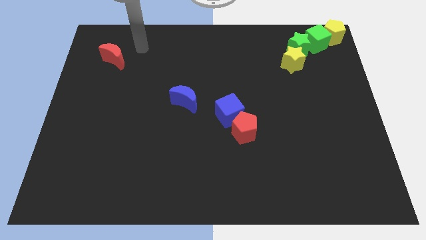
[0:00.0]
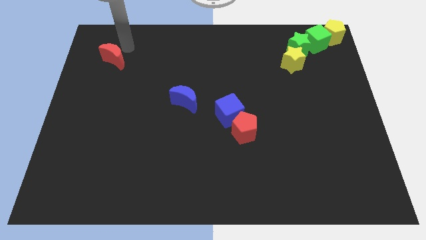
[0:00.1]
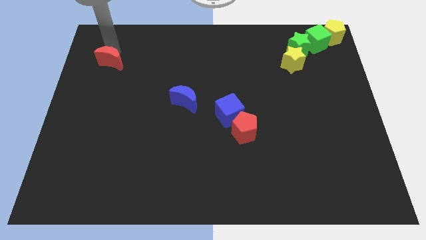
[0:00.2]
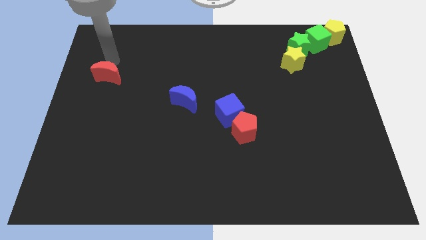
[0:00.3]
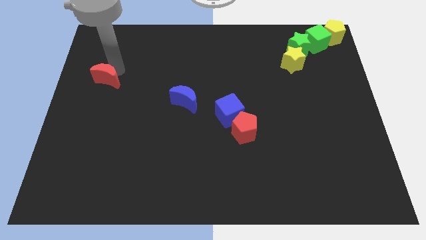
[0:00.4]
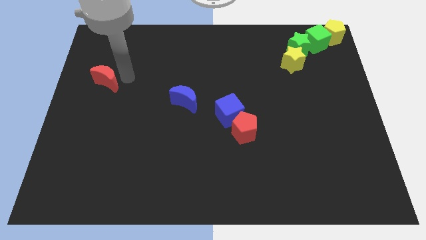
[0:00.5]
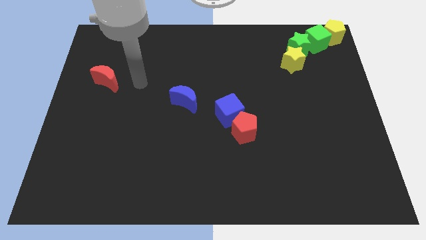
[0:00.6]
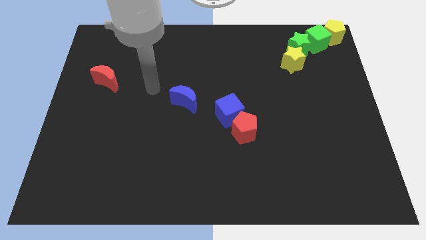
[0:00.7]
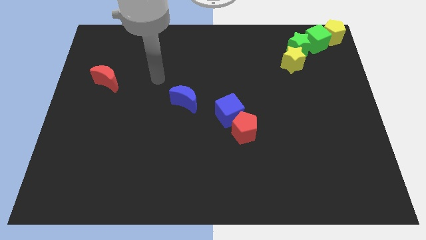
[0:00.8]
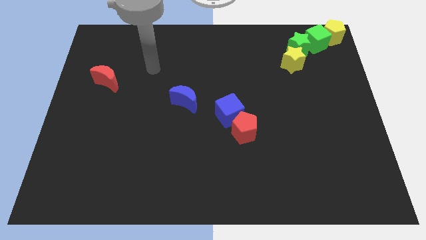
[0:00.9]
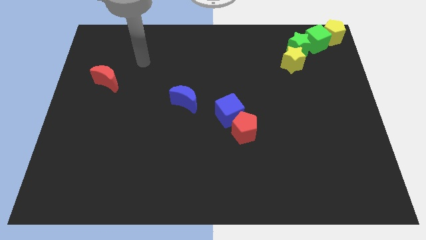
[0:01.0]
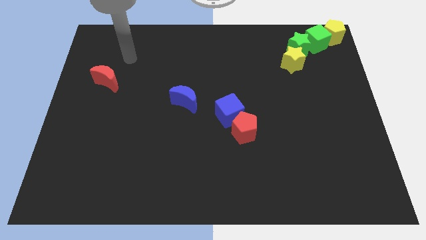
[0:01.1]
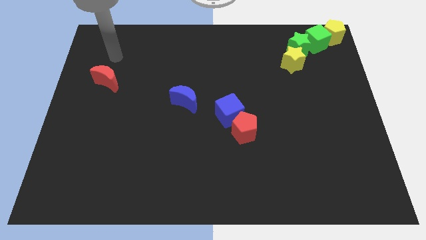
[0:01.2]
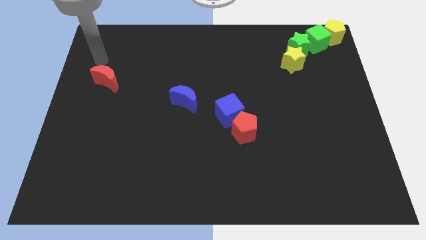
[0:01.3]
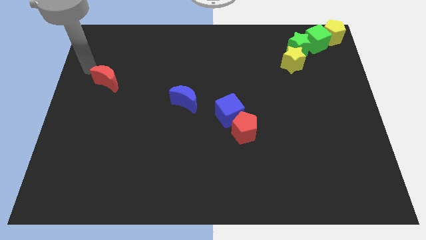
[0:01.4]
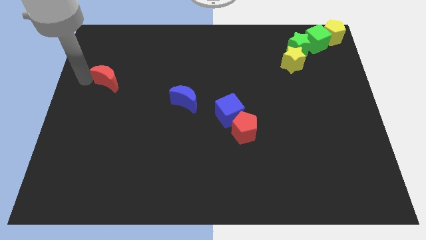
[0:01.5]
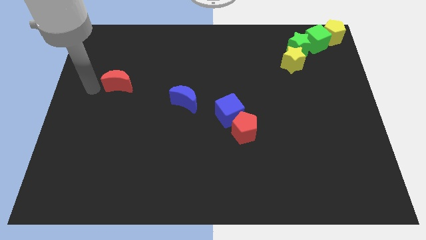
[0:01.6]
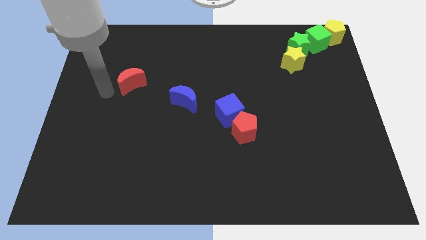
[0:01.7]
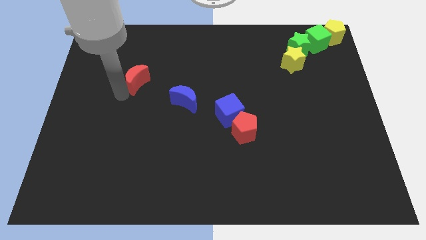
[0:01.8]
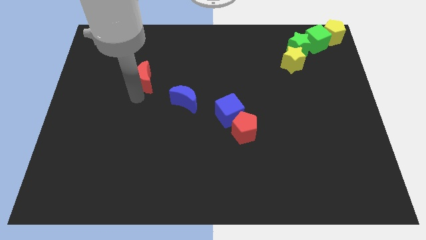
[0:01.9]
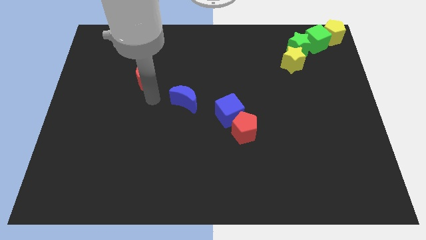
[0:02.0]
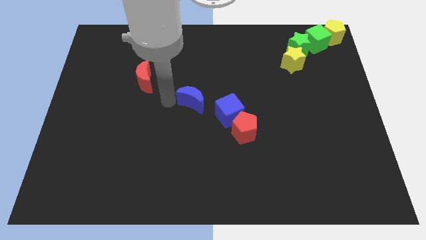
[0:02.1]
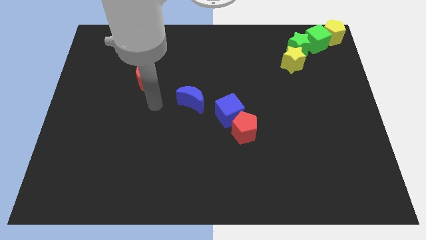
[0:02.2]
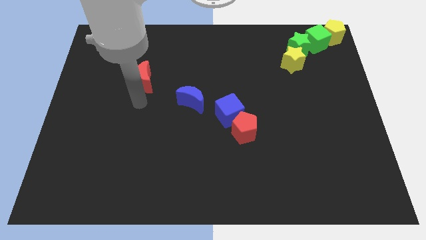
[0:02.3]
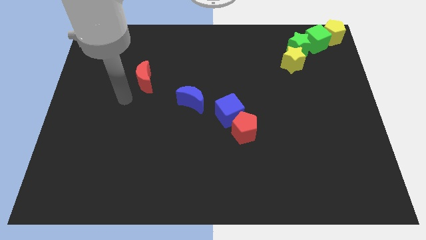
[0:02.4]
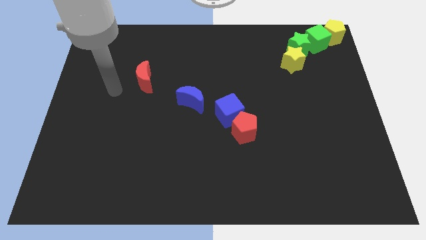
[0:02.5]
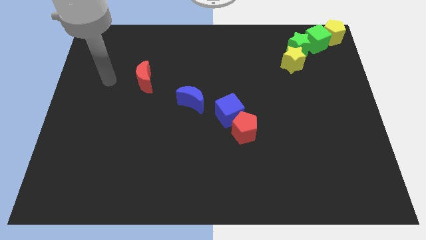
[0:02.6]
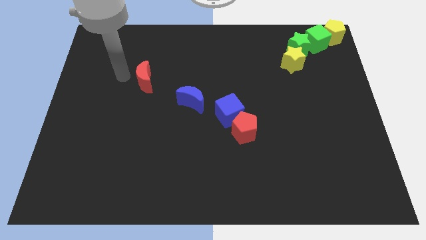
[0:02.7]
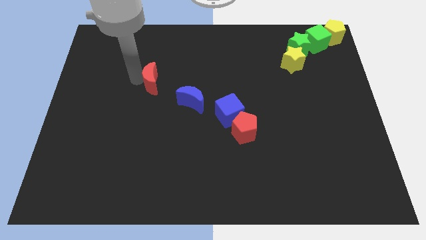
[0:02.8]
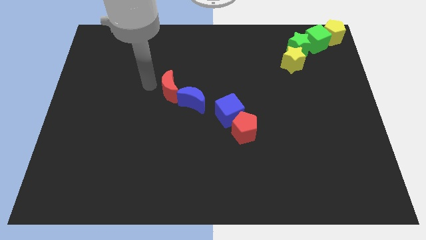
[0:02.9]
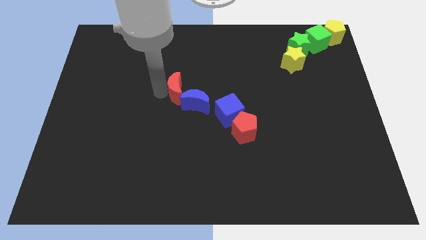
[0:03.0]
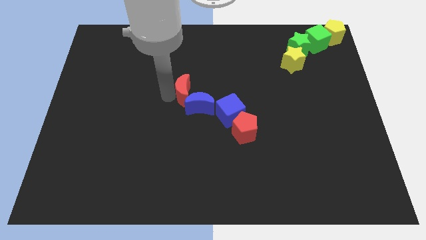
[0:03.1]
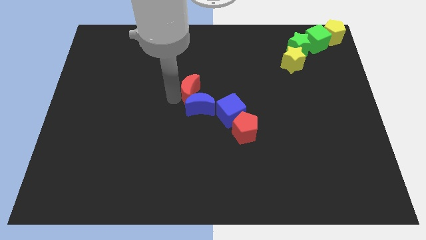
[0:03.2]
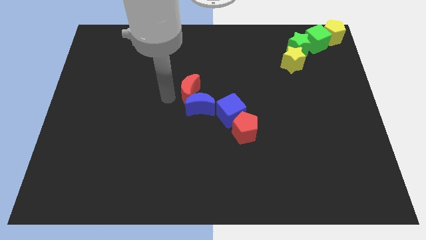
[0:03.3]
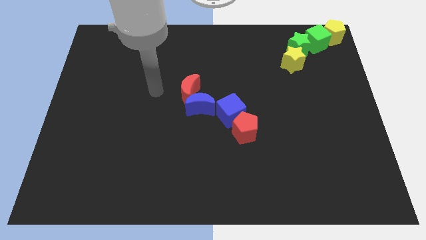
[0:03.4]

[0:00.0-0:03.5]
push the red moon into the blue crescent

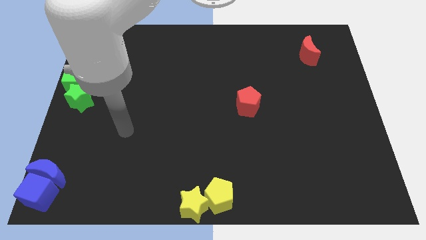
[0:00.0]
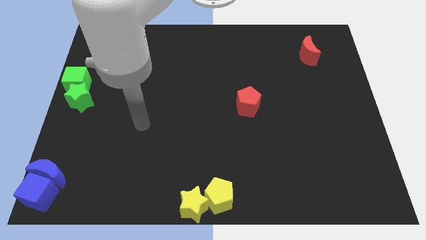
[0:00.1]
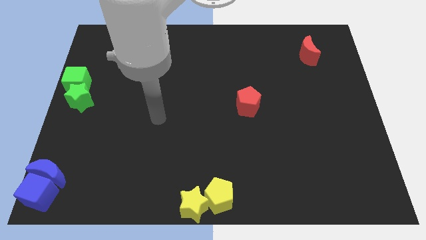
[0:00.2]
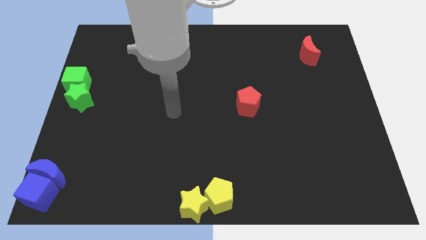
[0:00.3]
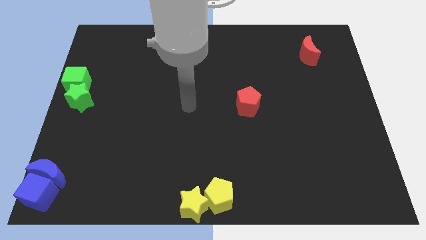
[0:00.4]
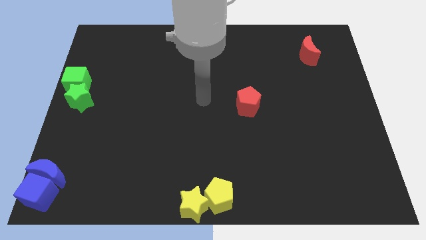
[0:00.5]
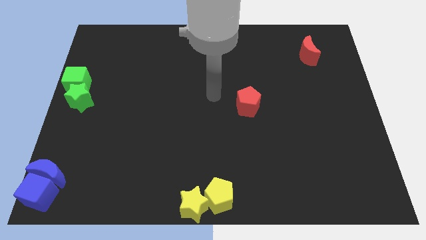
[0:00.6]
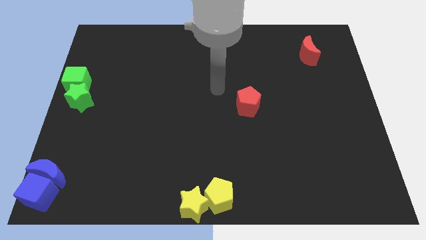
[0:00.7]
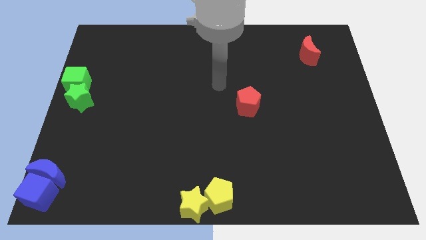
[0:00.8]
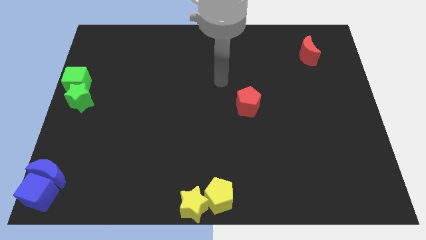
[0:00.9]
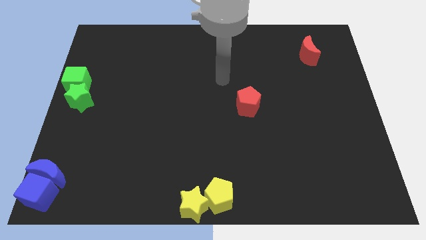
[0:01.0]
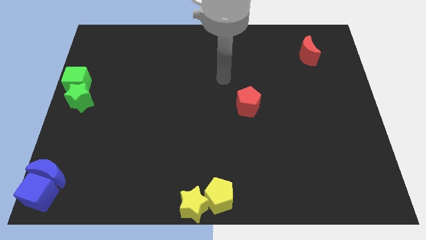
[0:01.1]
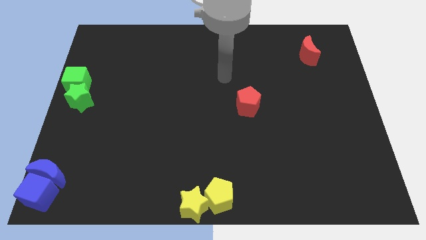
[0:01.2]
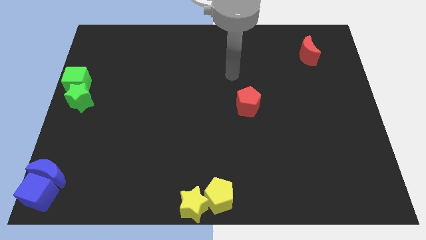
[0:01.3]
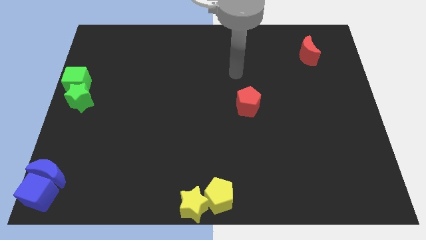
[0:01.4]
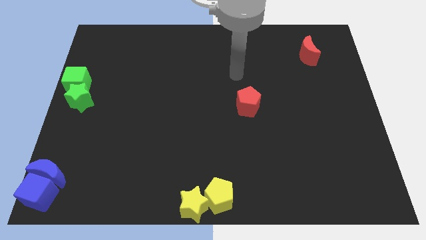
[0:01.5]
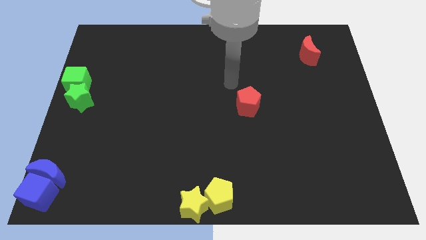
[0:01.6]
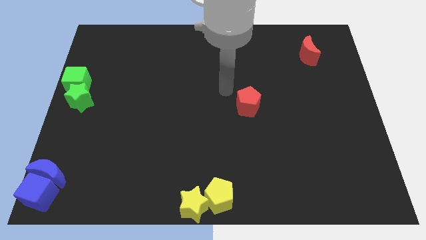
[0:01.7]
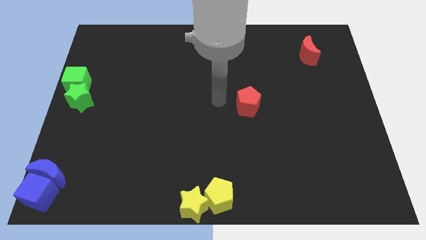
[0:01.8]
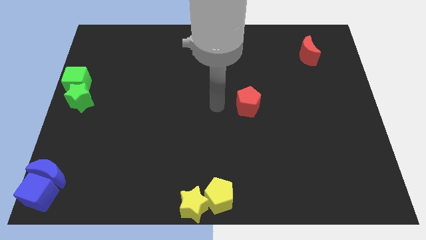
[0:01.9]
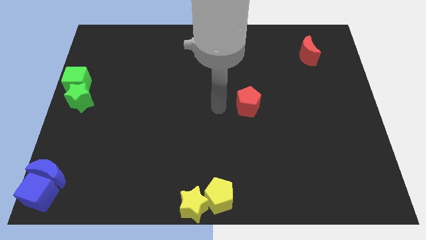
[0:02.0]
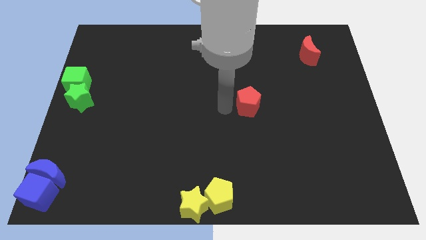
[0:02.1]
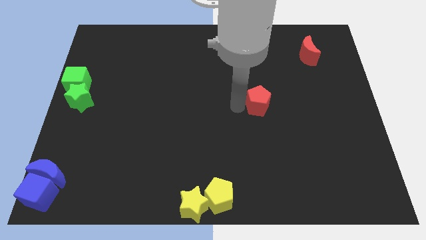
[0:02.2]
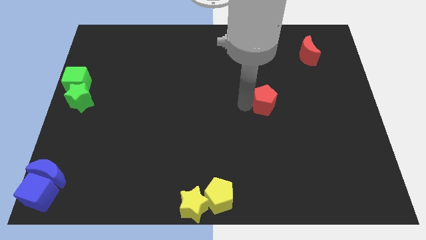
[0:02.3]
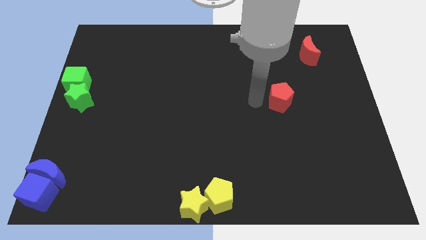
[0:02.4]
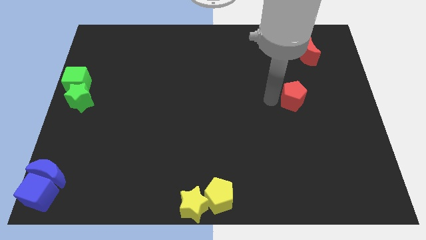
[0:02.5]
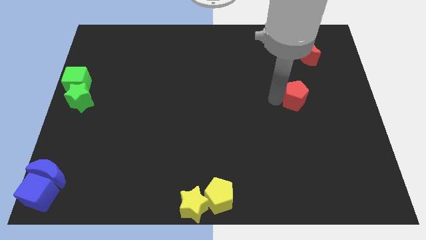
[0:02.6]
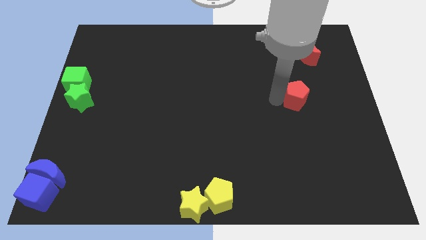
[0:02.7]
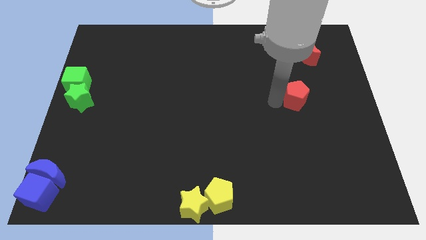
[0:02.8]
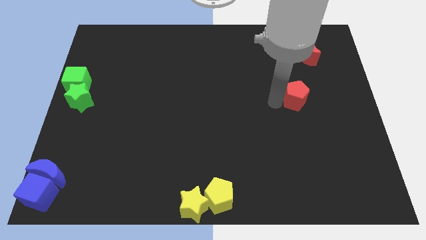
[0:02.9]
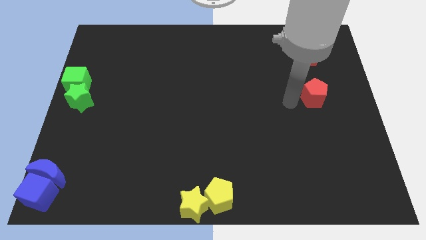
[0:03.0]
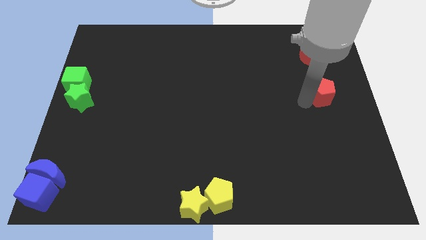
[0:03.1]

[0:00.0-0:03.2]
push the red pentagon towards the center right

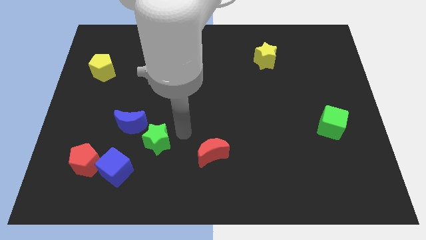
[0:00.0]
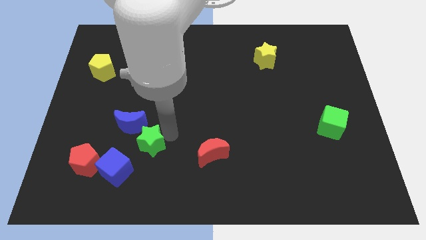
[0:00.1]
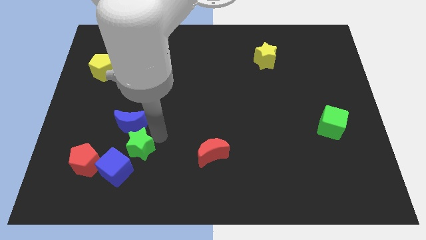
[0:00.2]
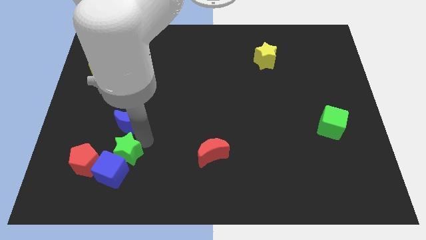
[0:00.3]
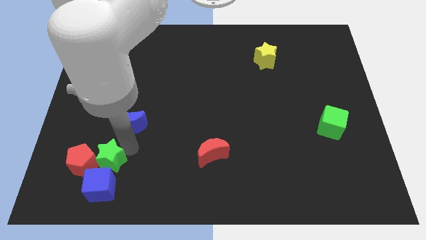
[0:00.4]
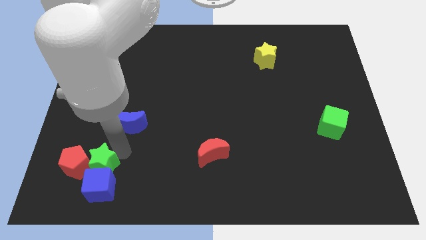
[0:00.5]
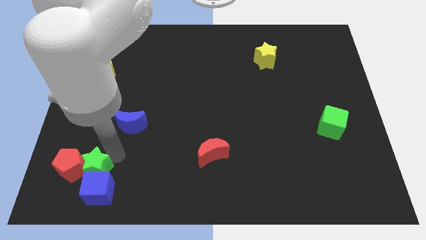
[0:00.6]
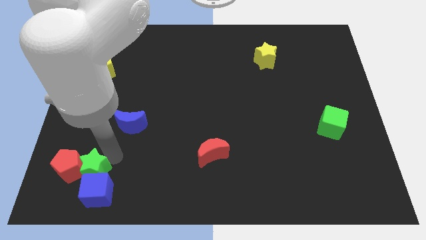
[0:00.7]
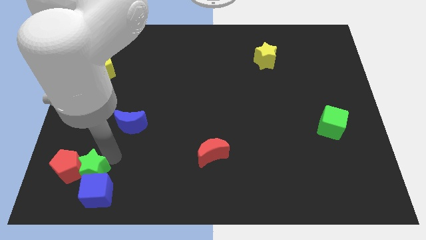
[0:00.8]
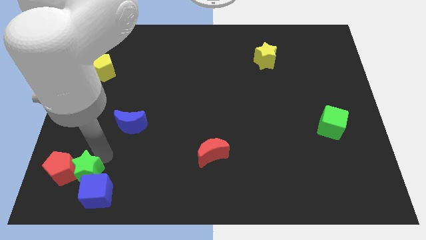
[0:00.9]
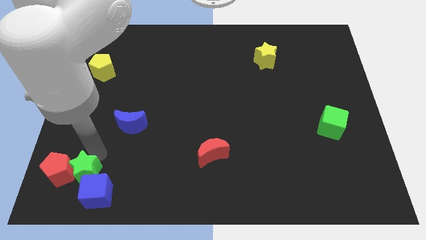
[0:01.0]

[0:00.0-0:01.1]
slide green star into red pentagon and blue cube

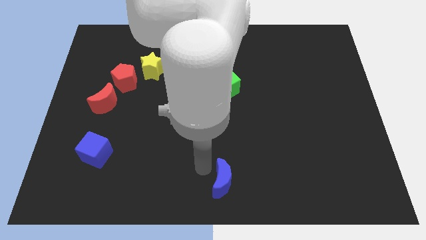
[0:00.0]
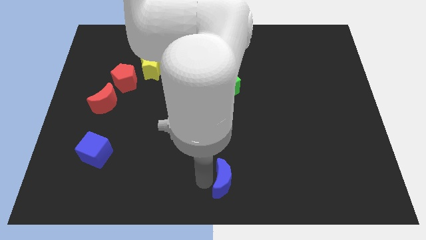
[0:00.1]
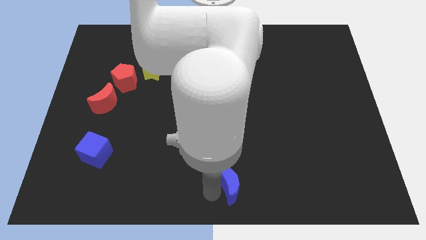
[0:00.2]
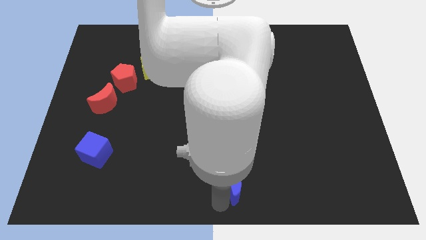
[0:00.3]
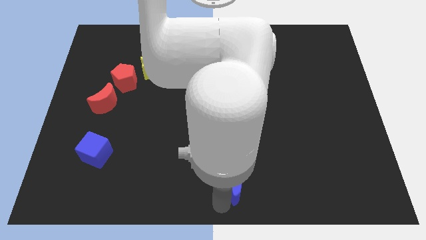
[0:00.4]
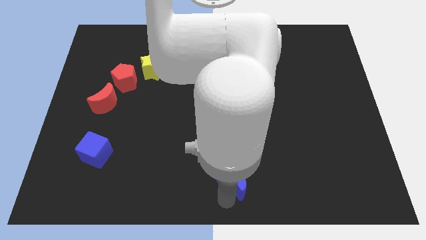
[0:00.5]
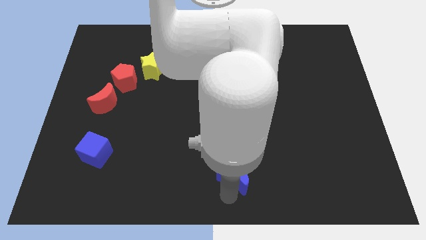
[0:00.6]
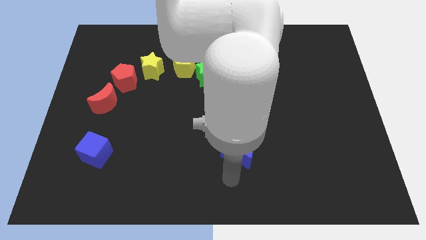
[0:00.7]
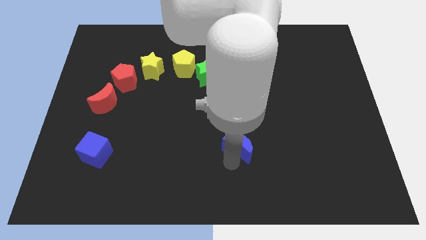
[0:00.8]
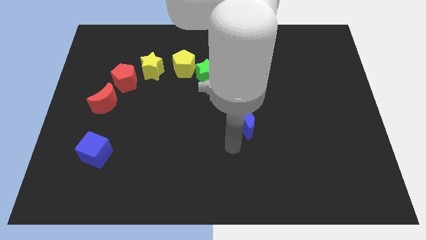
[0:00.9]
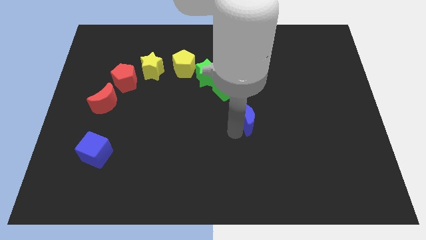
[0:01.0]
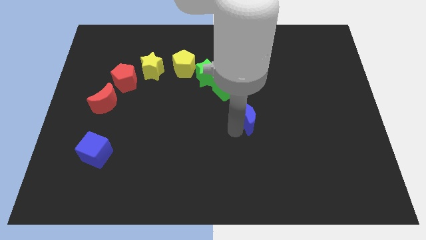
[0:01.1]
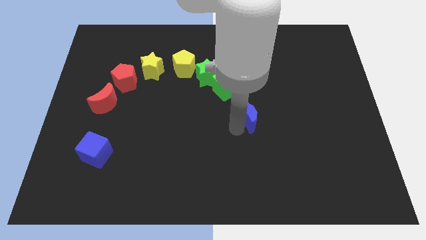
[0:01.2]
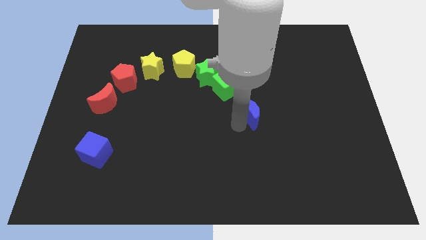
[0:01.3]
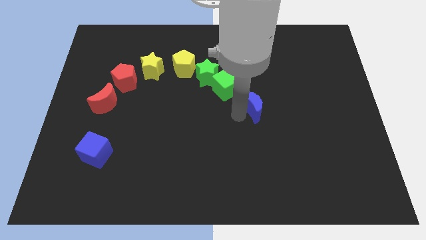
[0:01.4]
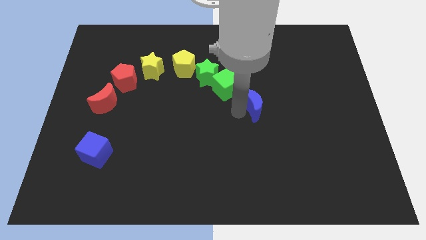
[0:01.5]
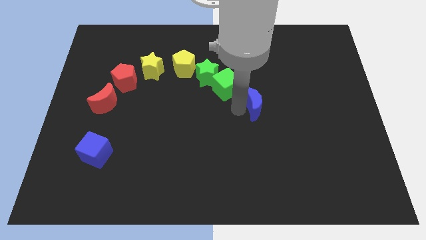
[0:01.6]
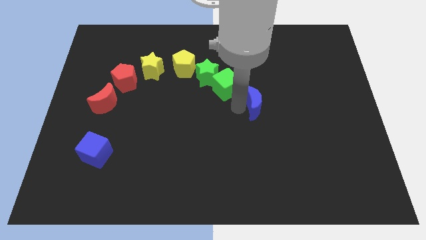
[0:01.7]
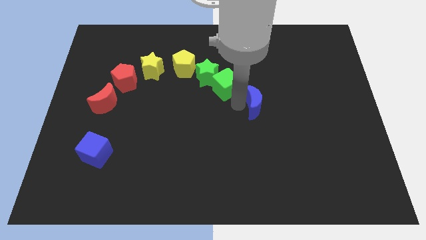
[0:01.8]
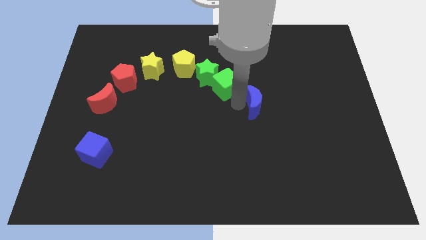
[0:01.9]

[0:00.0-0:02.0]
move blue crescent towards the green cube
